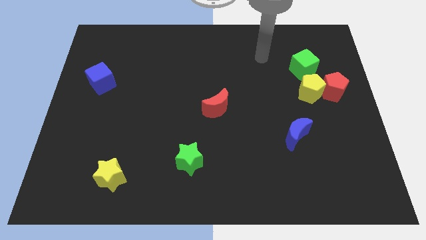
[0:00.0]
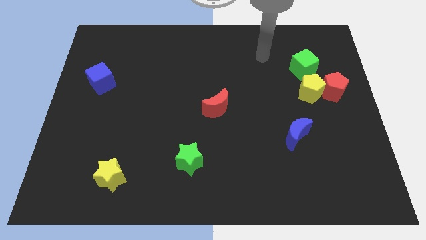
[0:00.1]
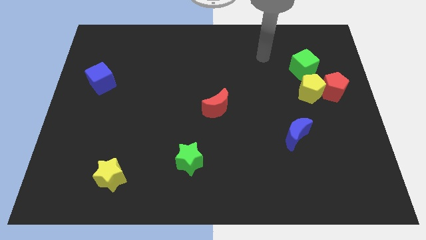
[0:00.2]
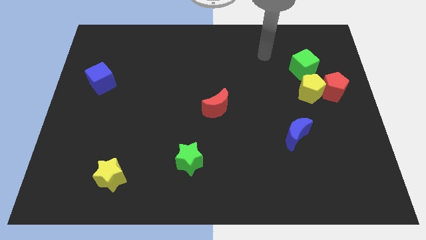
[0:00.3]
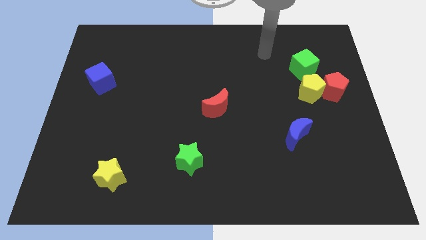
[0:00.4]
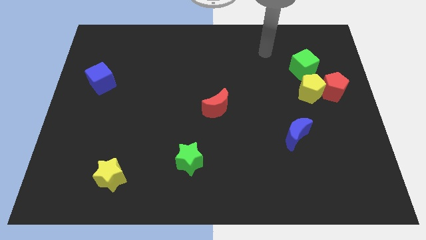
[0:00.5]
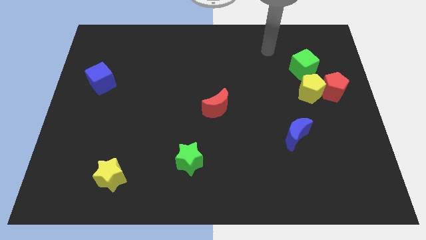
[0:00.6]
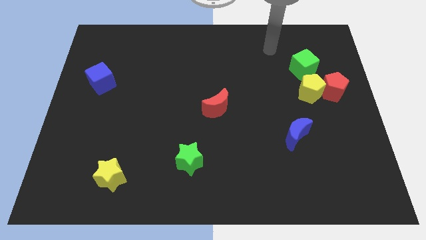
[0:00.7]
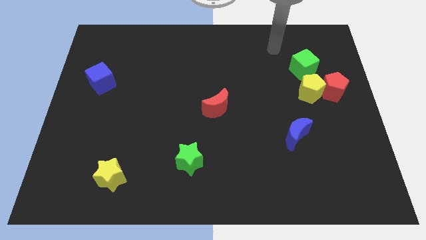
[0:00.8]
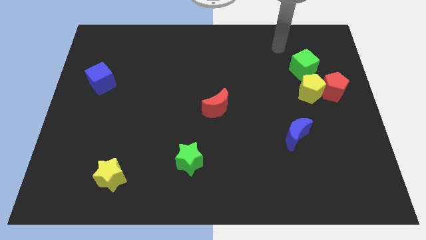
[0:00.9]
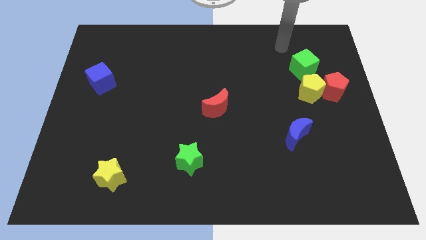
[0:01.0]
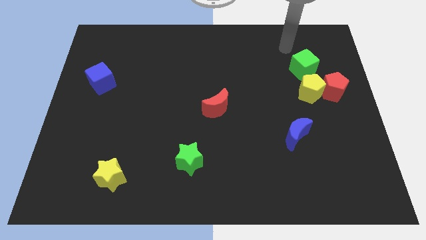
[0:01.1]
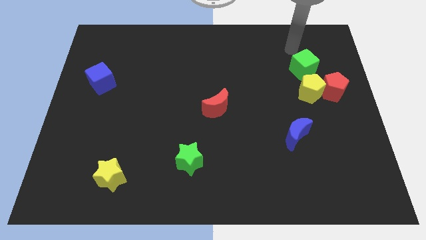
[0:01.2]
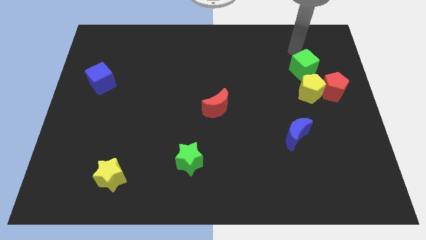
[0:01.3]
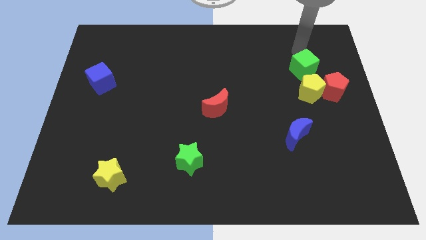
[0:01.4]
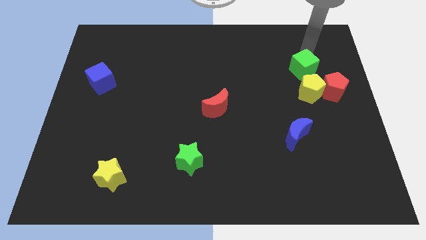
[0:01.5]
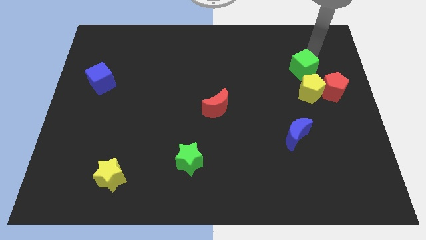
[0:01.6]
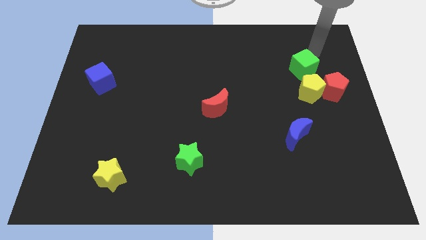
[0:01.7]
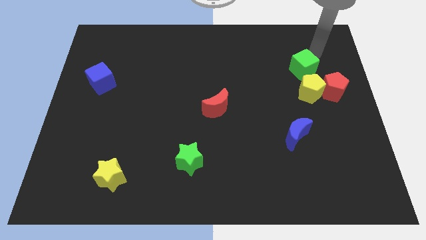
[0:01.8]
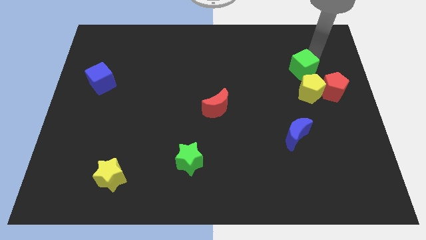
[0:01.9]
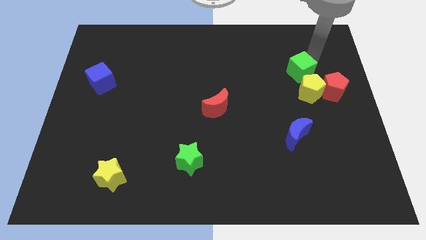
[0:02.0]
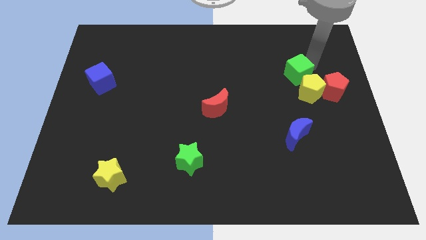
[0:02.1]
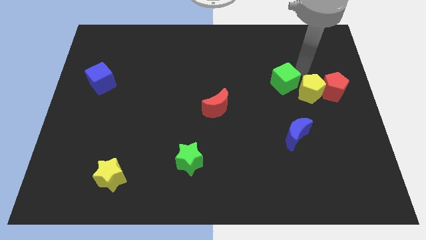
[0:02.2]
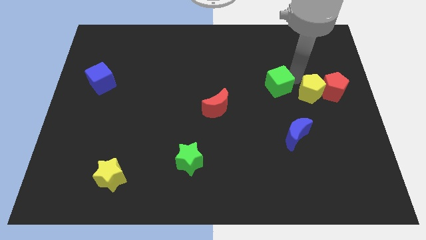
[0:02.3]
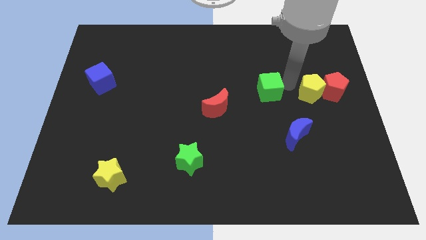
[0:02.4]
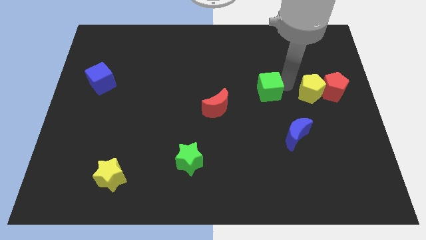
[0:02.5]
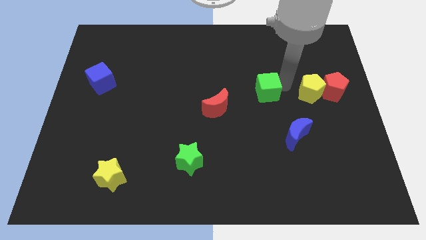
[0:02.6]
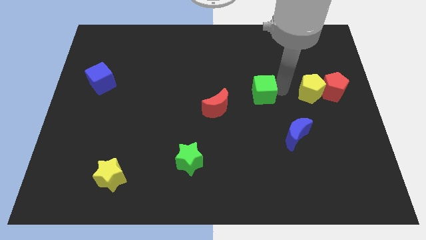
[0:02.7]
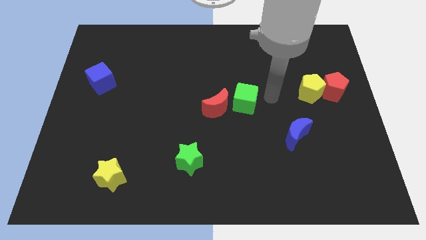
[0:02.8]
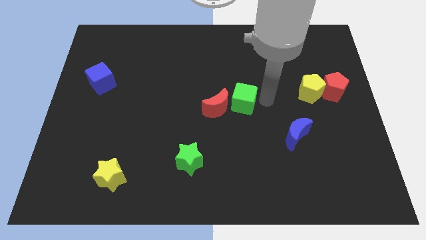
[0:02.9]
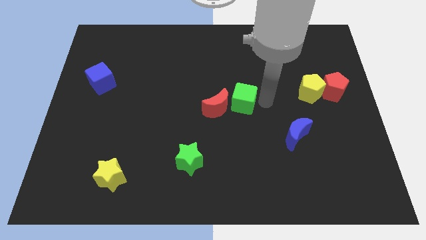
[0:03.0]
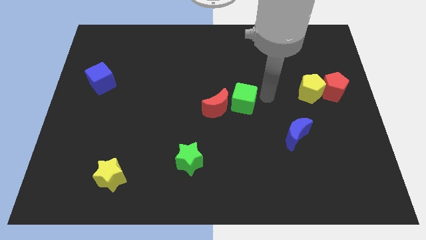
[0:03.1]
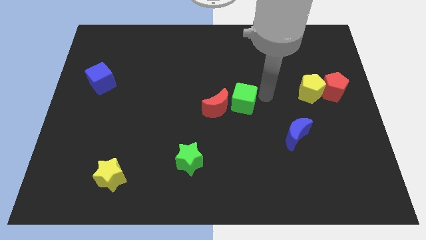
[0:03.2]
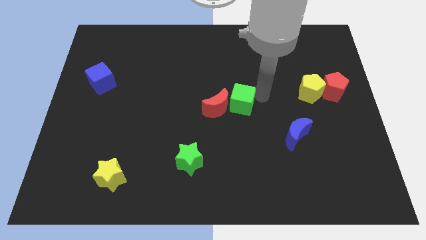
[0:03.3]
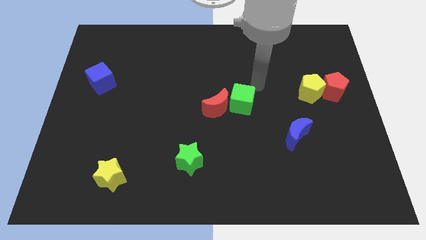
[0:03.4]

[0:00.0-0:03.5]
place the green cube right to the red moon

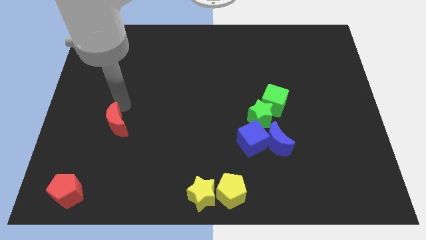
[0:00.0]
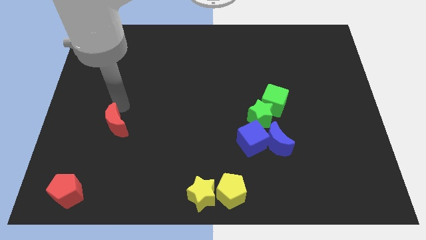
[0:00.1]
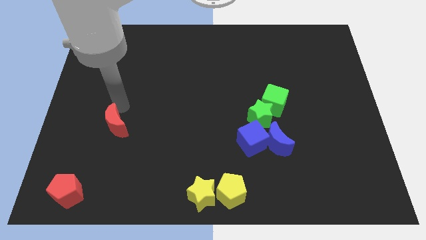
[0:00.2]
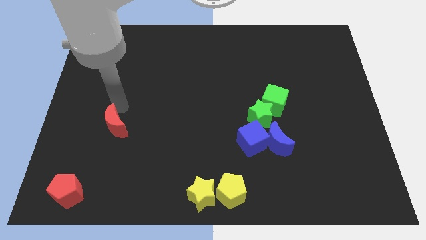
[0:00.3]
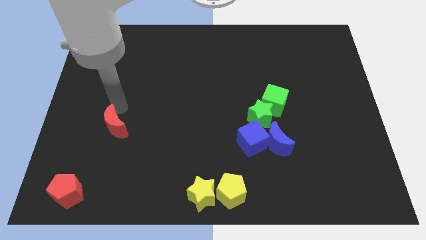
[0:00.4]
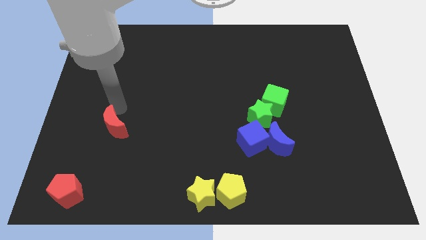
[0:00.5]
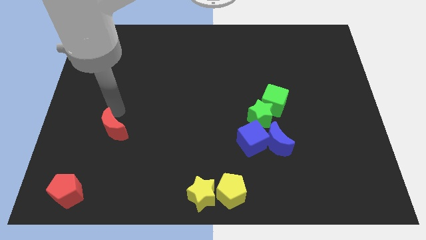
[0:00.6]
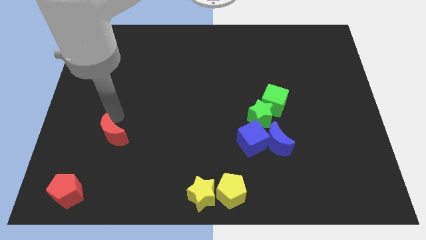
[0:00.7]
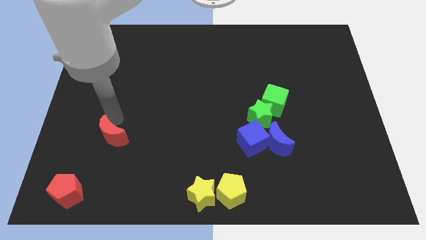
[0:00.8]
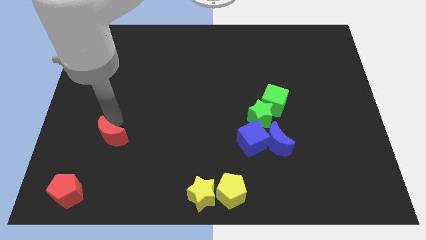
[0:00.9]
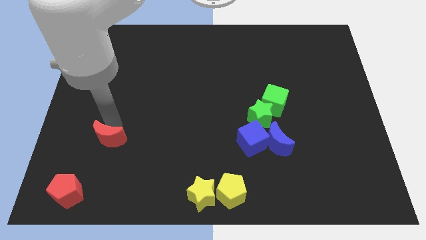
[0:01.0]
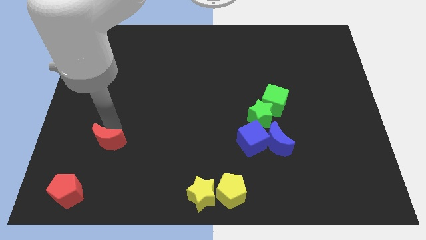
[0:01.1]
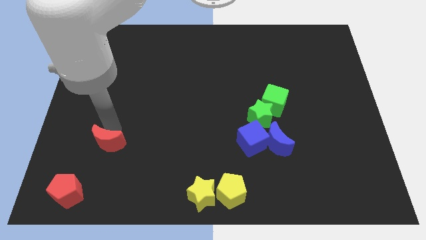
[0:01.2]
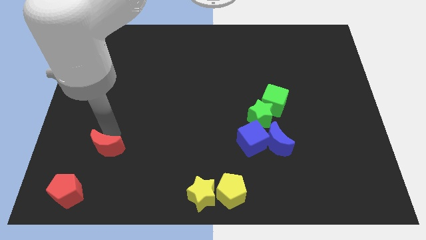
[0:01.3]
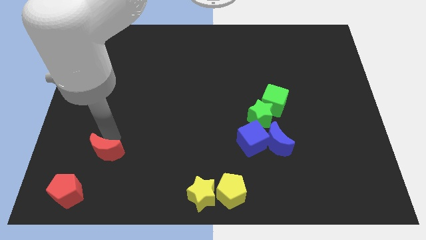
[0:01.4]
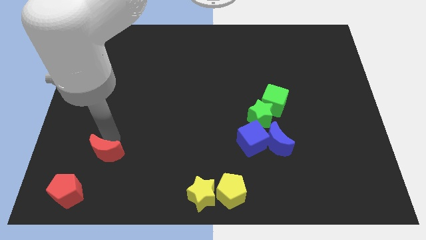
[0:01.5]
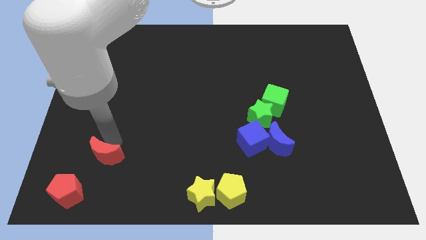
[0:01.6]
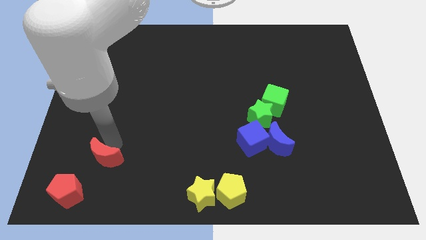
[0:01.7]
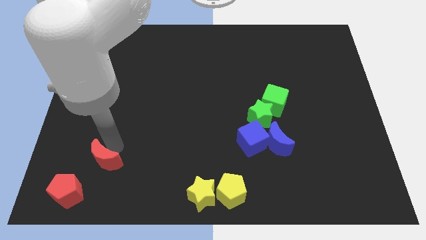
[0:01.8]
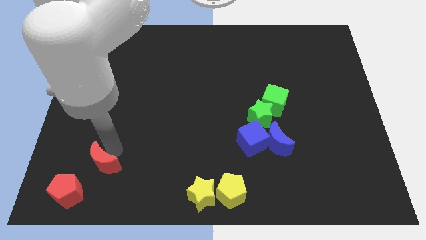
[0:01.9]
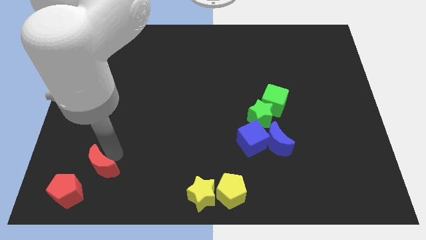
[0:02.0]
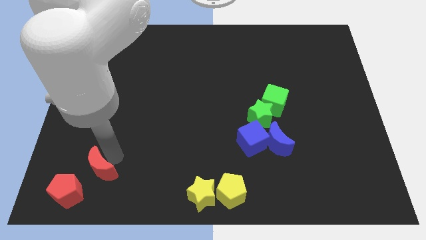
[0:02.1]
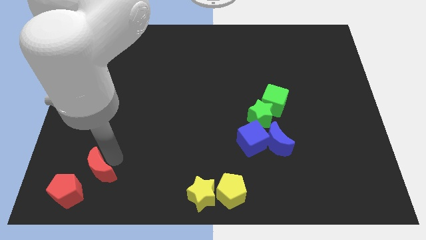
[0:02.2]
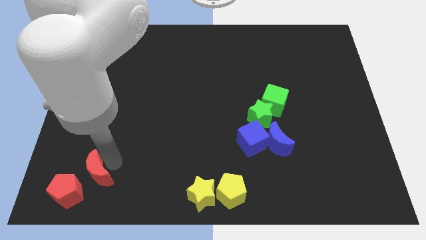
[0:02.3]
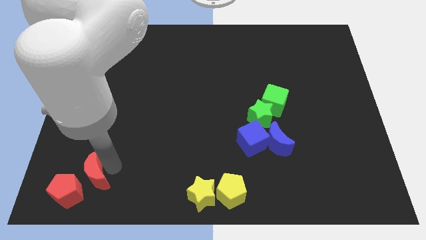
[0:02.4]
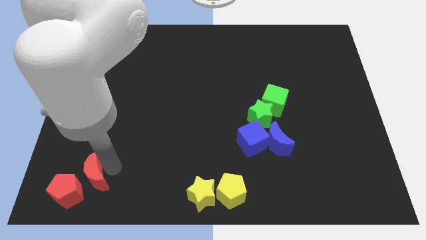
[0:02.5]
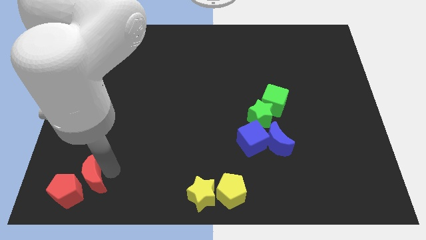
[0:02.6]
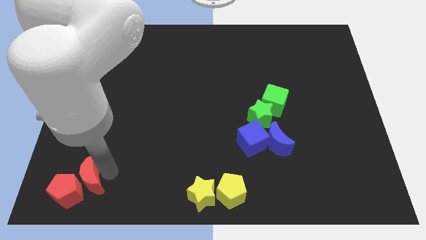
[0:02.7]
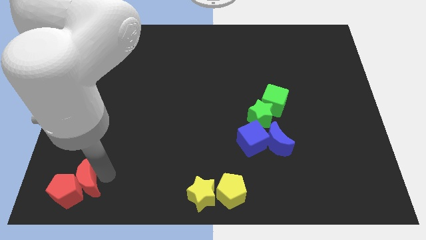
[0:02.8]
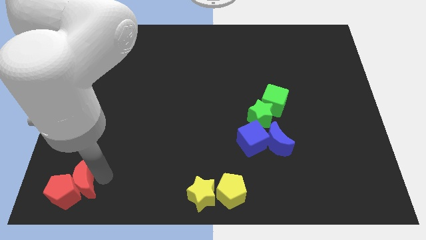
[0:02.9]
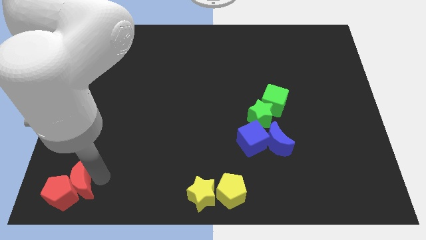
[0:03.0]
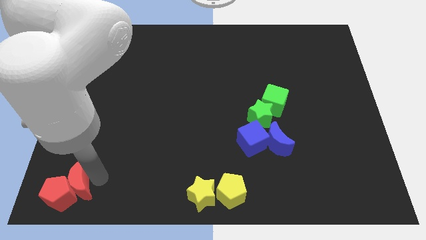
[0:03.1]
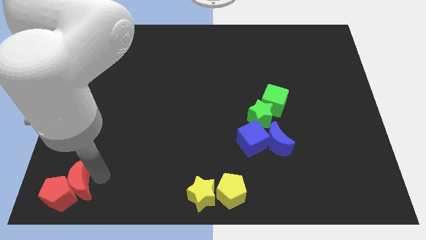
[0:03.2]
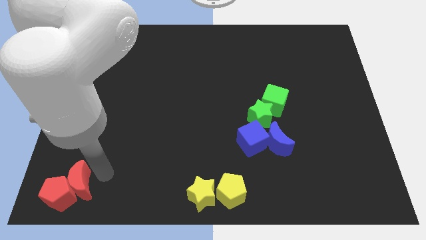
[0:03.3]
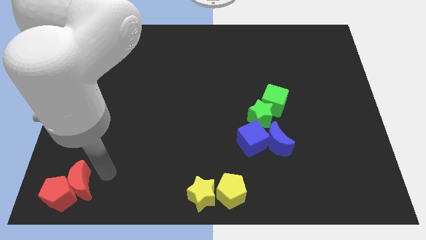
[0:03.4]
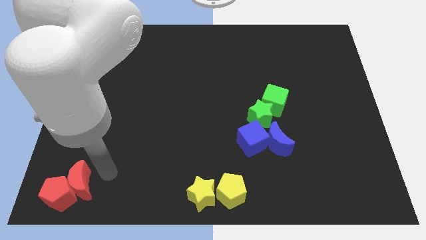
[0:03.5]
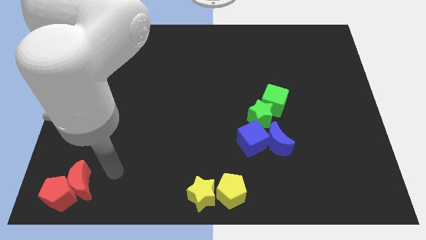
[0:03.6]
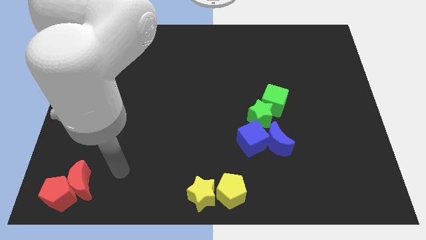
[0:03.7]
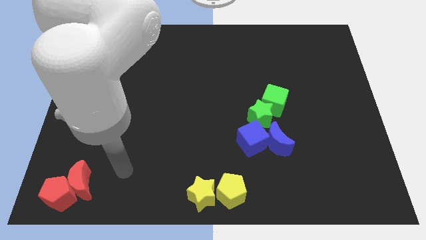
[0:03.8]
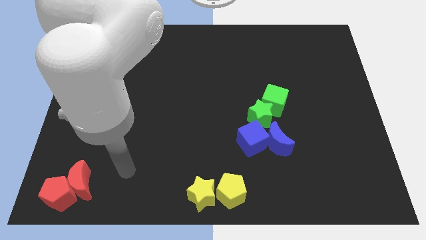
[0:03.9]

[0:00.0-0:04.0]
place the red moon into the red pentagon

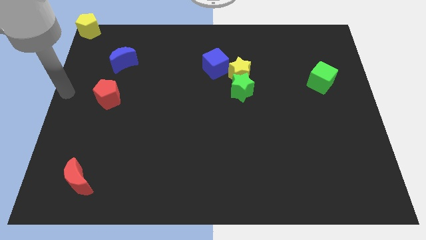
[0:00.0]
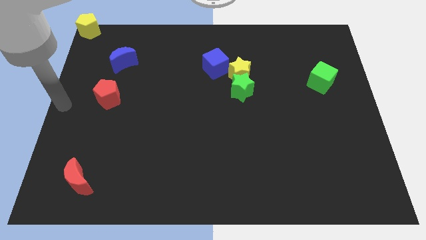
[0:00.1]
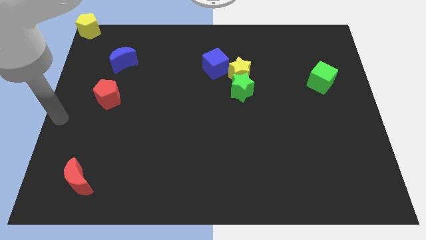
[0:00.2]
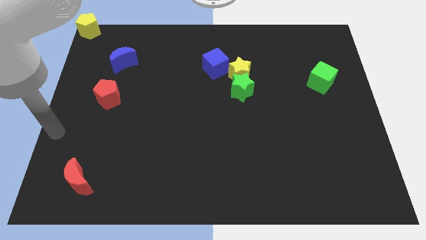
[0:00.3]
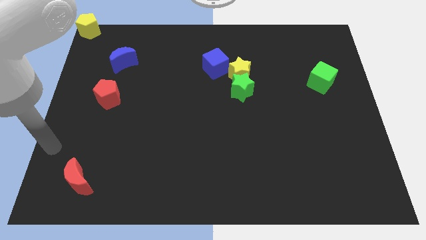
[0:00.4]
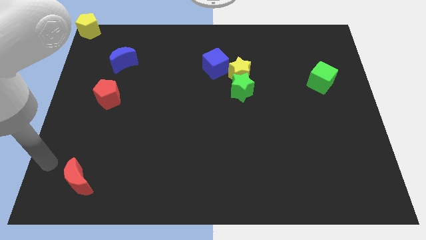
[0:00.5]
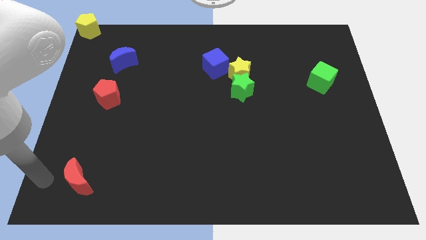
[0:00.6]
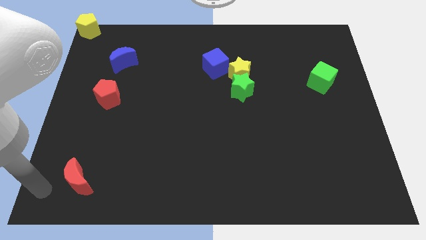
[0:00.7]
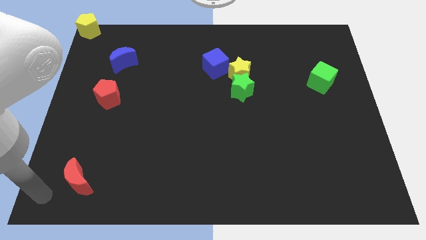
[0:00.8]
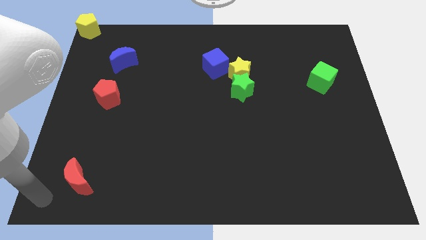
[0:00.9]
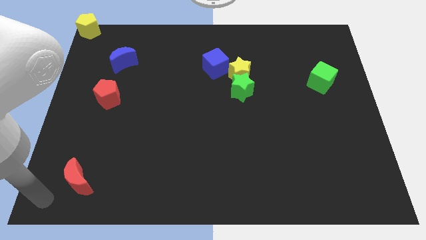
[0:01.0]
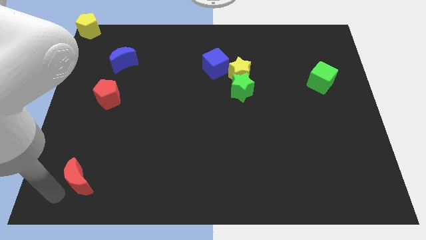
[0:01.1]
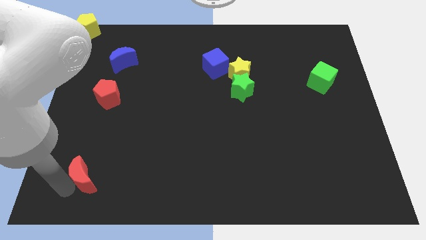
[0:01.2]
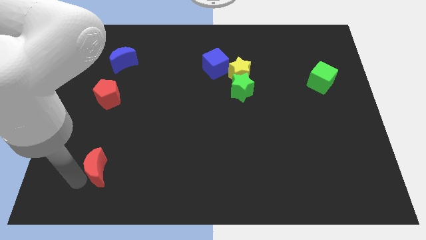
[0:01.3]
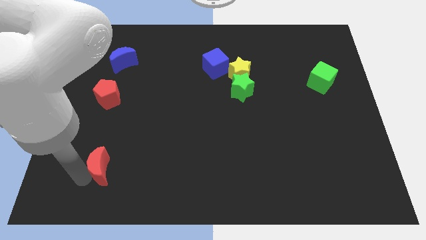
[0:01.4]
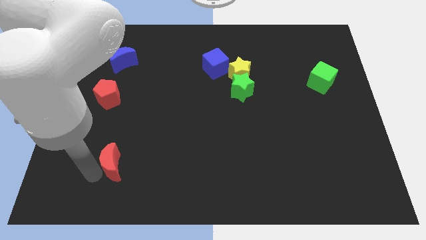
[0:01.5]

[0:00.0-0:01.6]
place red moon to the bottom of red pentagon
